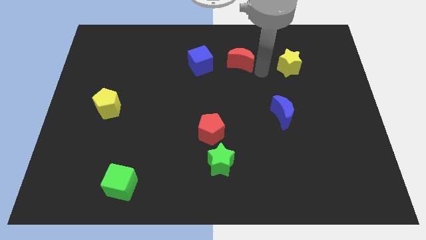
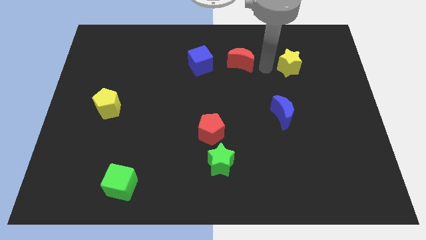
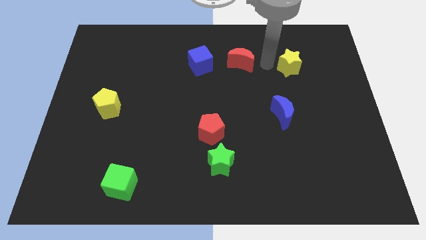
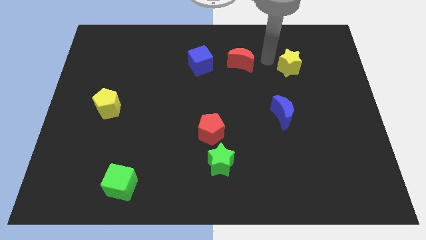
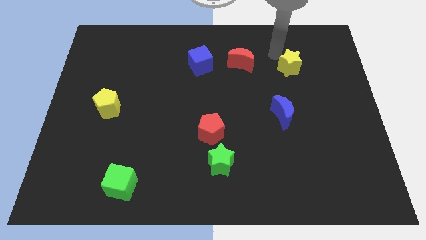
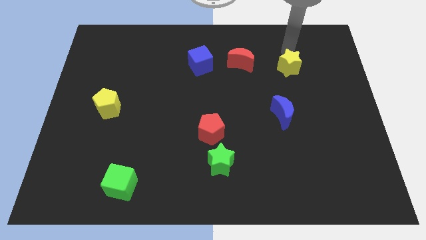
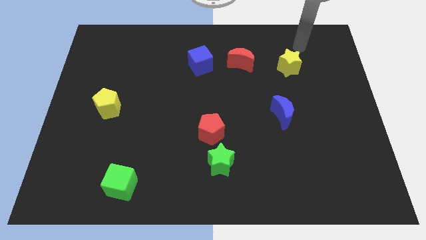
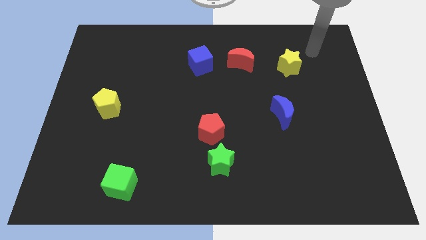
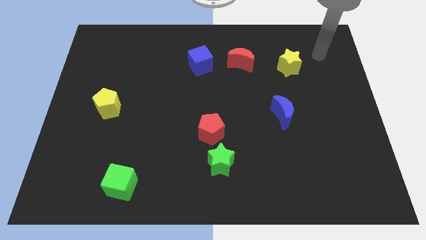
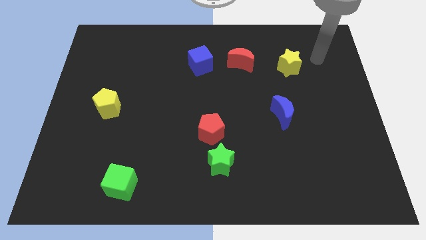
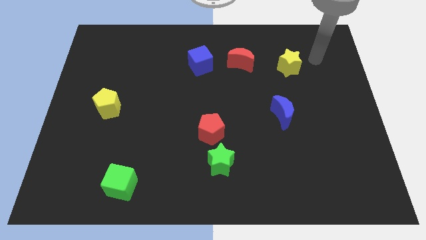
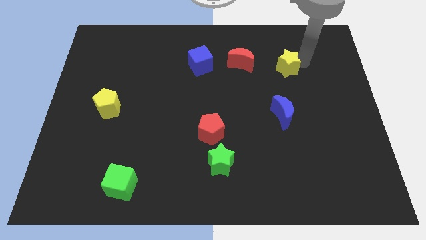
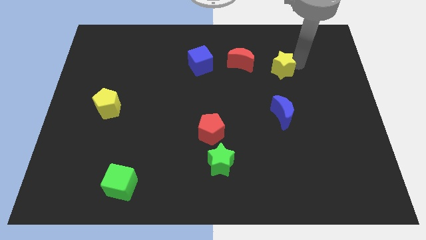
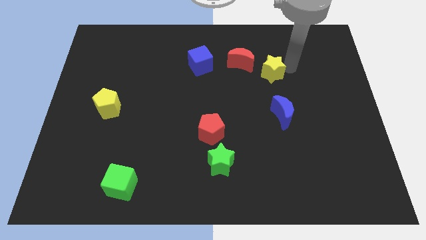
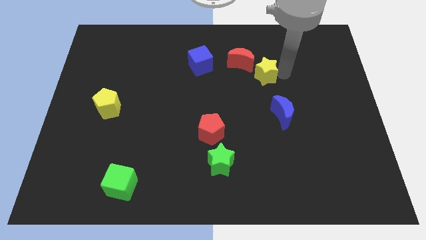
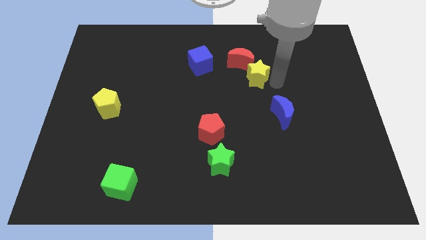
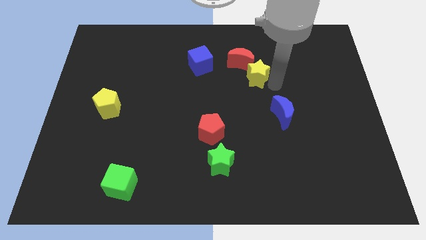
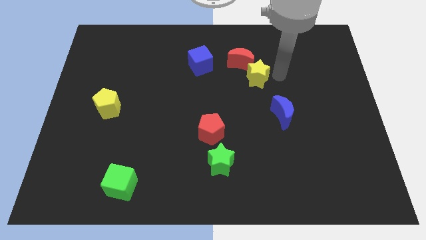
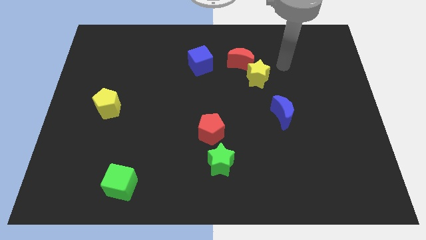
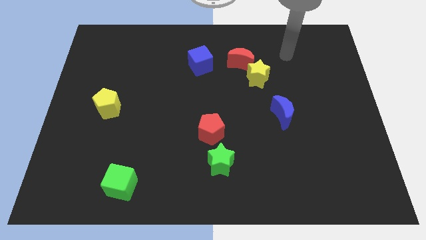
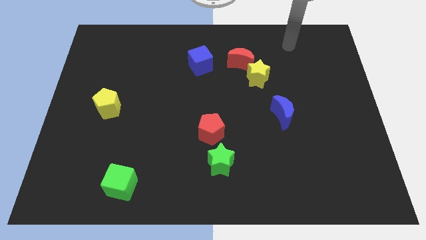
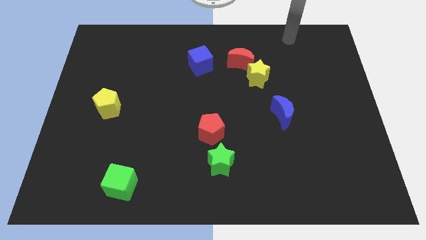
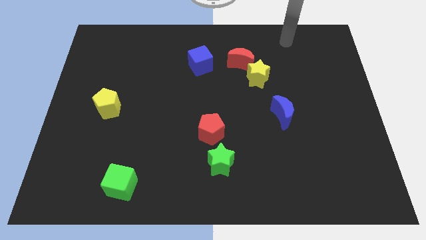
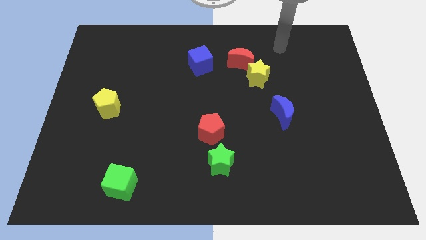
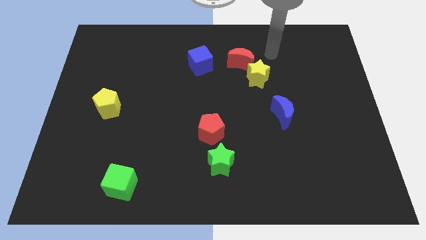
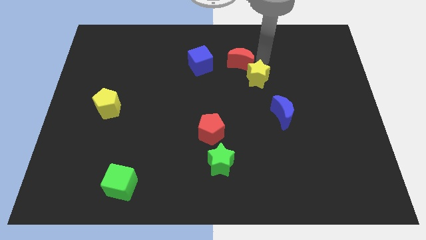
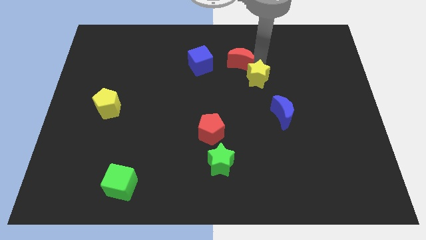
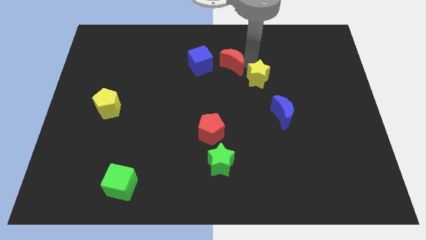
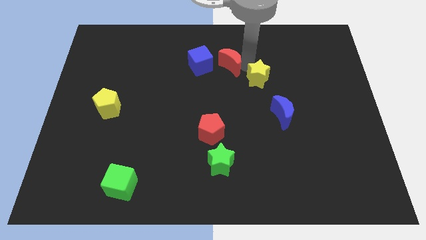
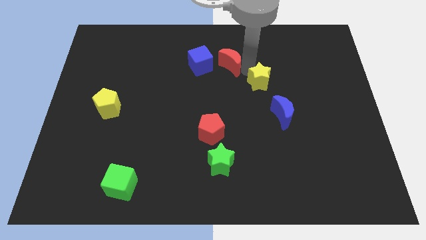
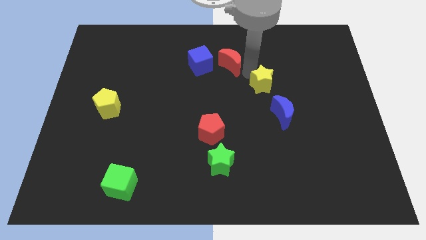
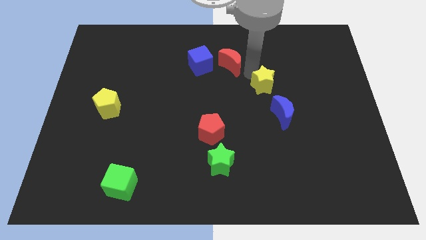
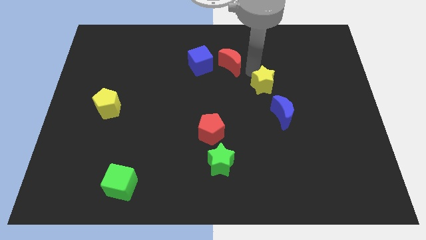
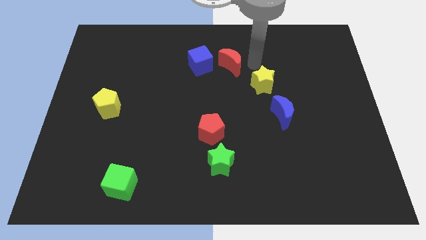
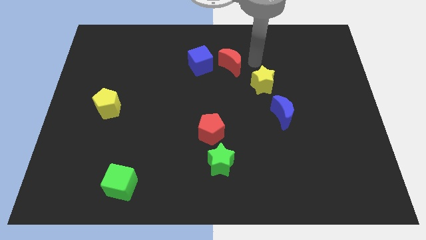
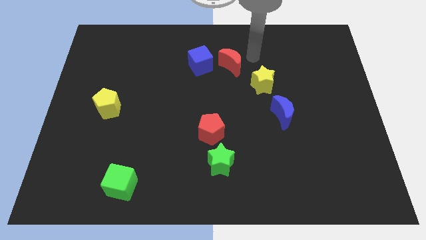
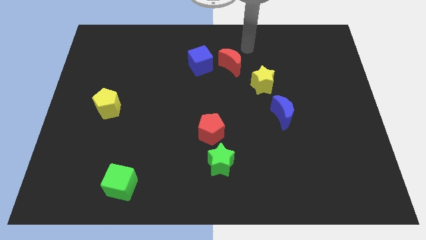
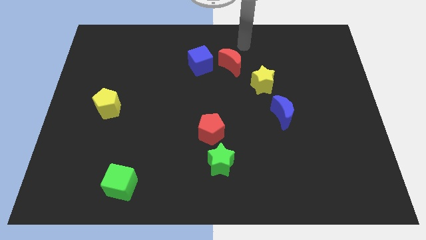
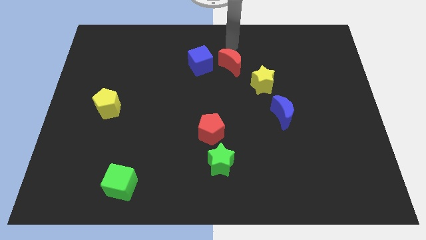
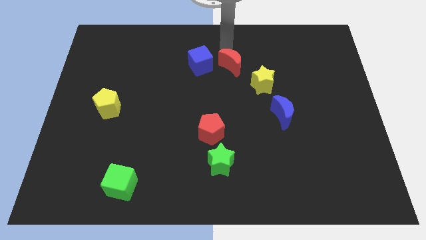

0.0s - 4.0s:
make a diagonal line out of yellow star red and the blue moons

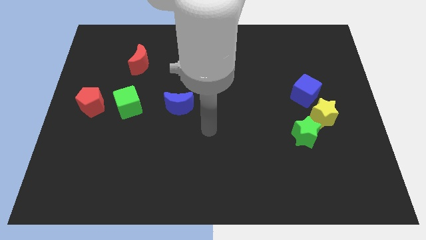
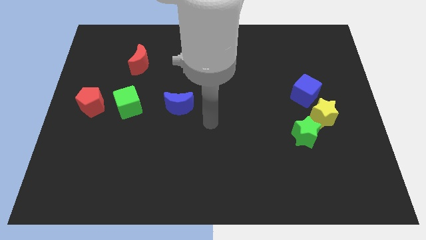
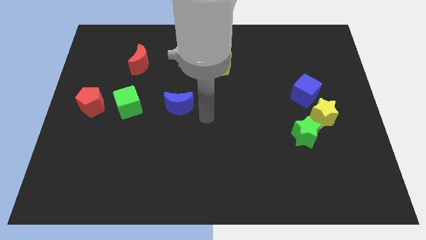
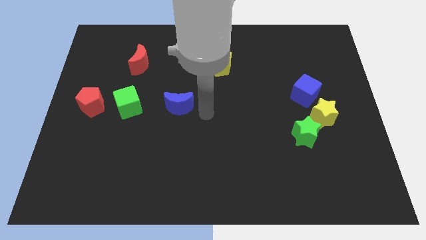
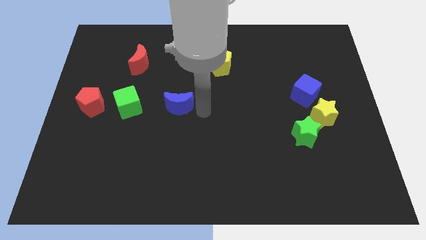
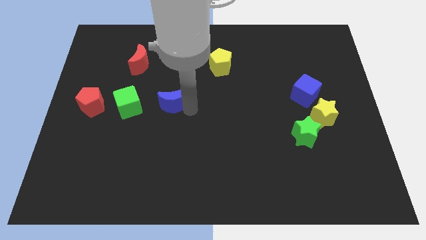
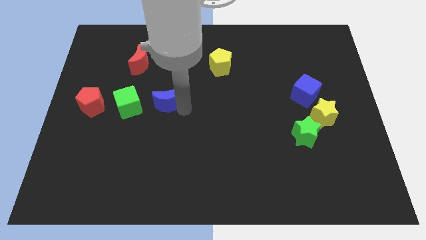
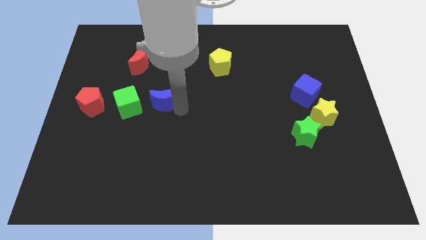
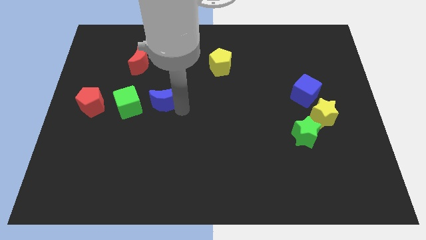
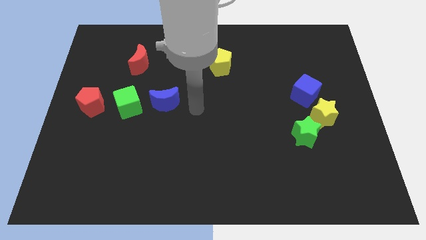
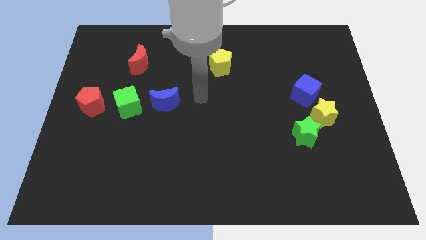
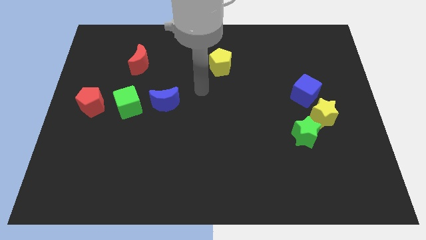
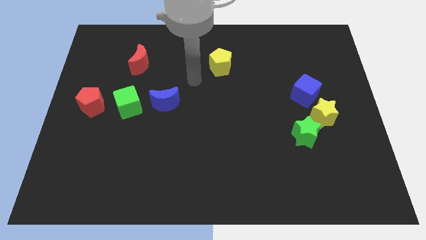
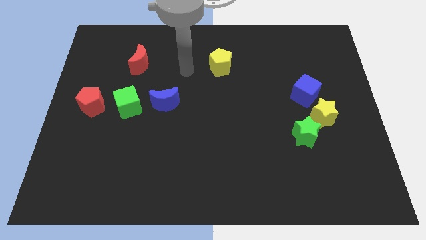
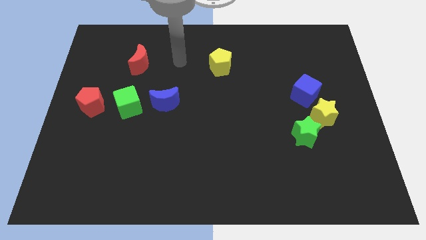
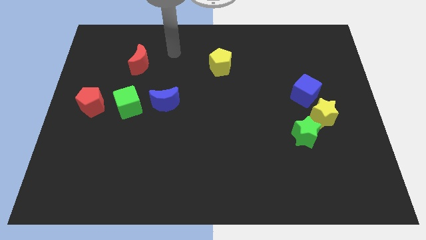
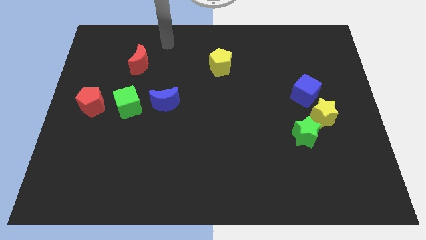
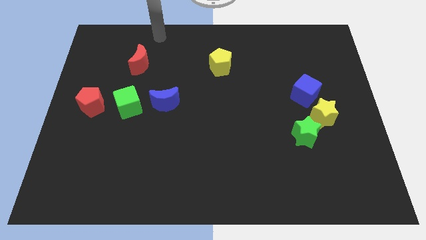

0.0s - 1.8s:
push blue crescent close to right of green cube

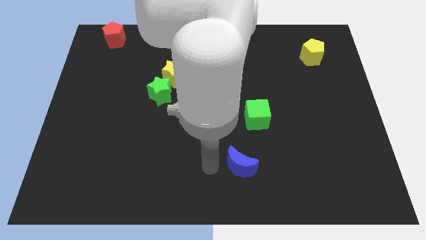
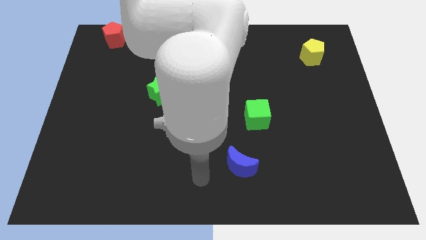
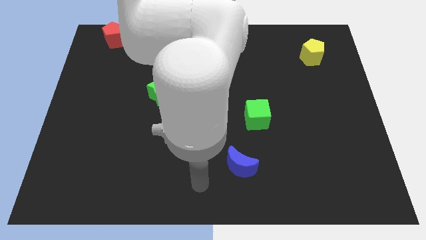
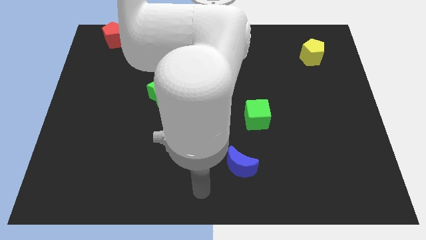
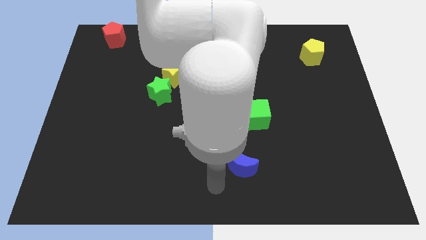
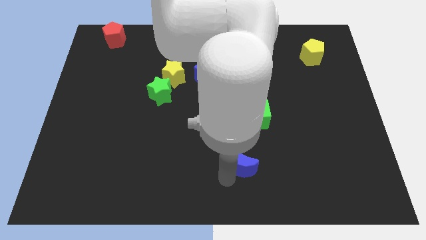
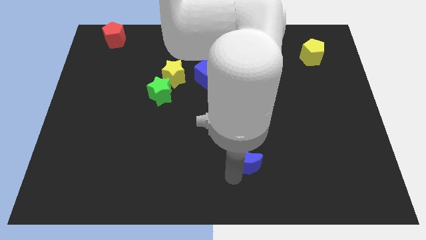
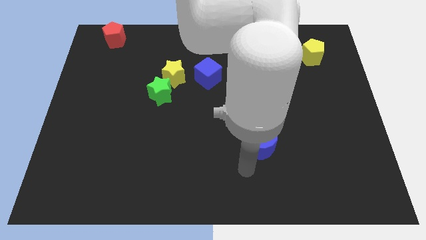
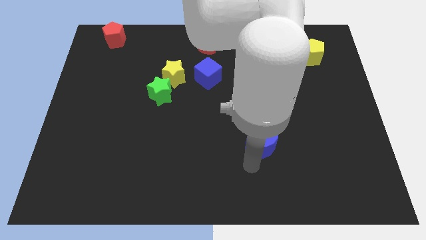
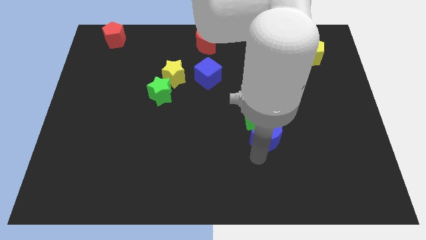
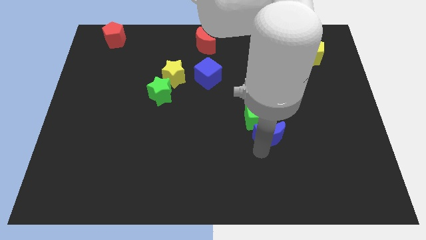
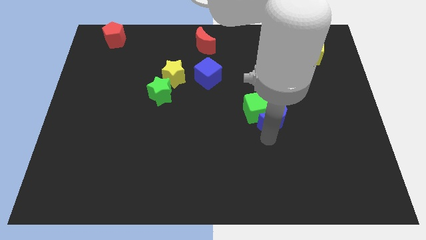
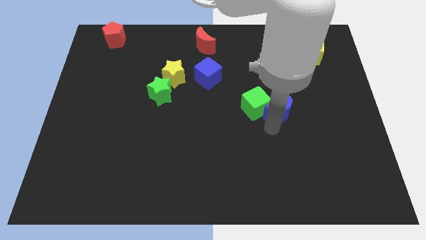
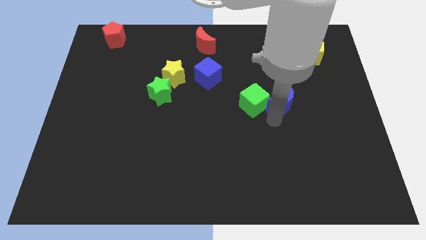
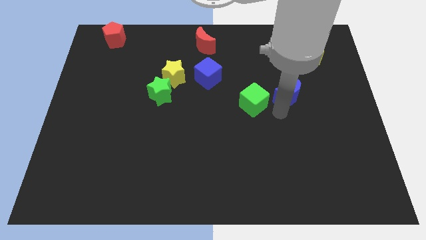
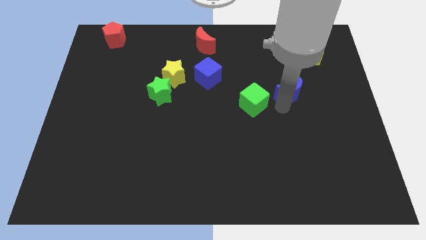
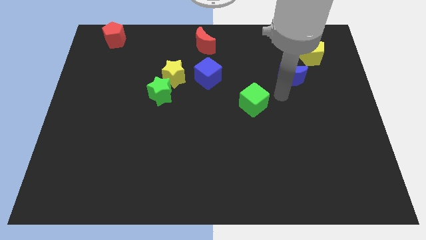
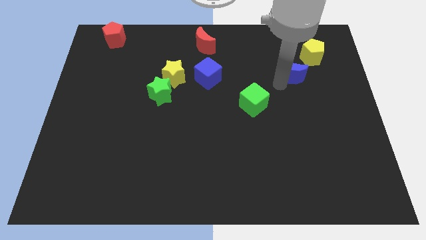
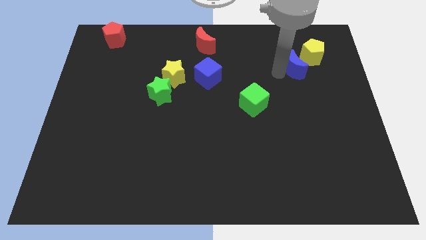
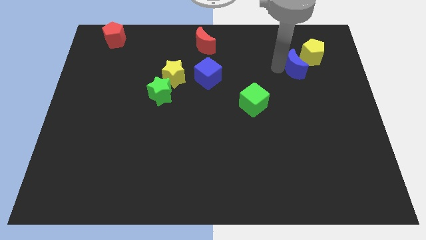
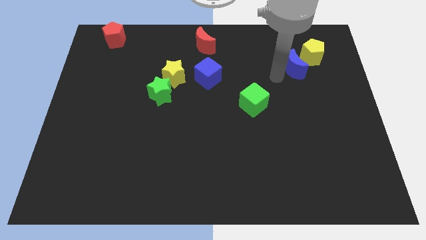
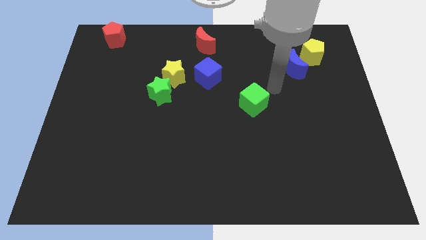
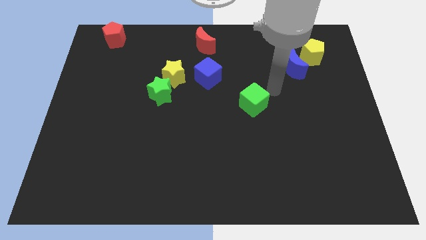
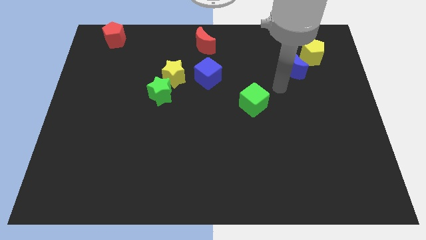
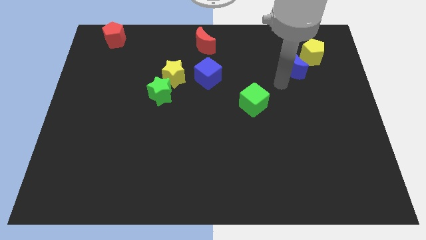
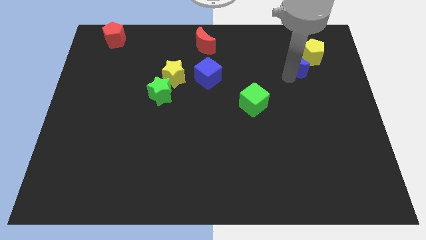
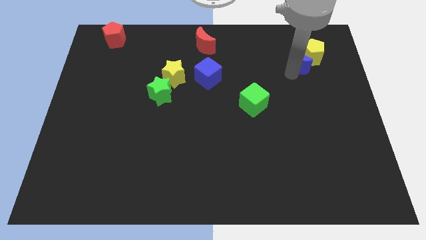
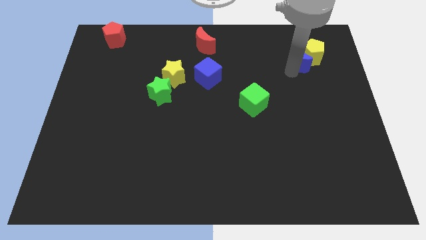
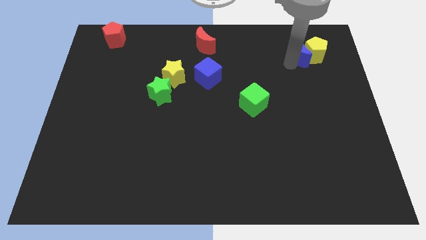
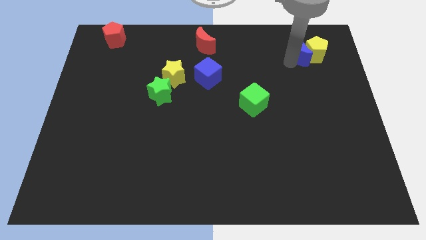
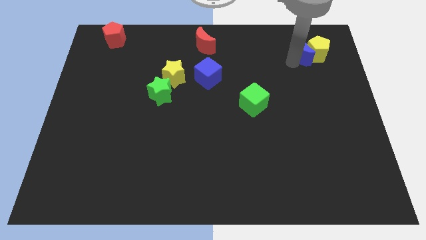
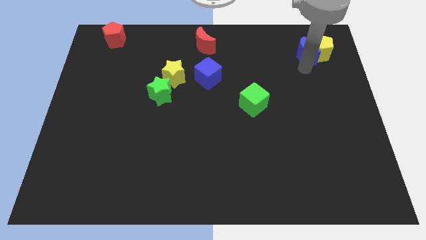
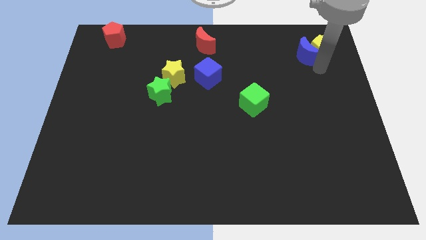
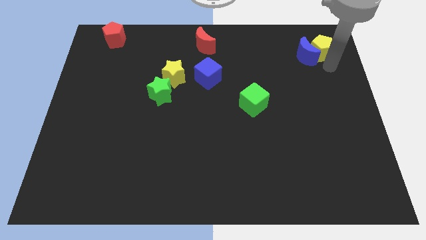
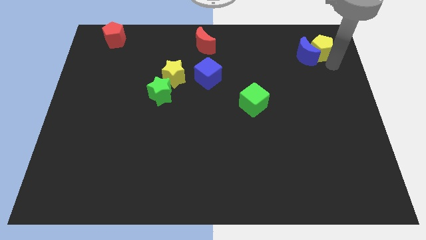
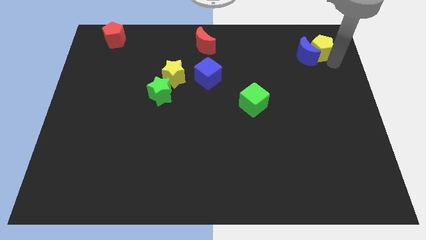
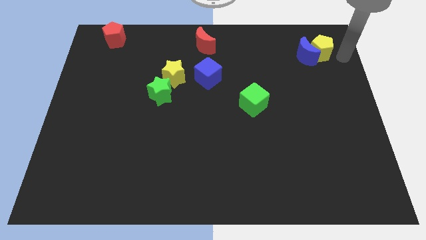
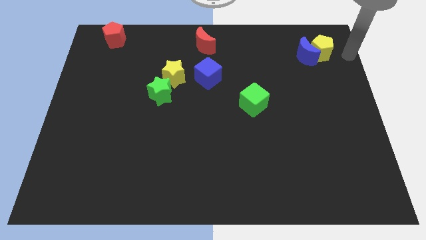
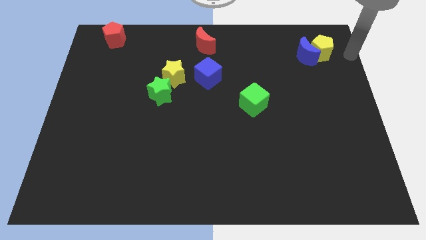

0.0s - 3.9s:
place blue crescent to the left of yellow pentagon
